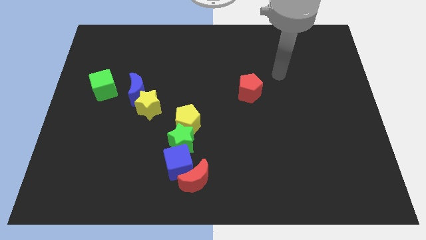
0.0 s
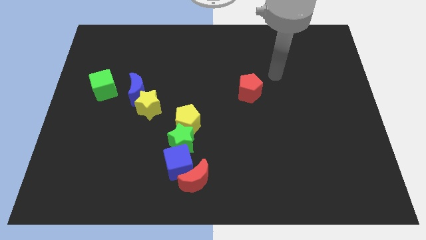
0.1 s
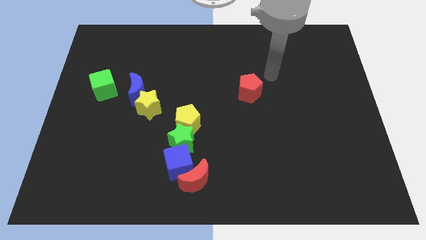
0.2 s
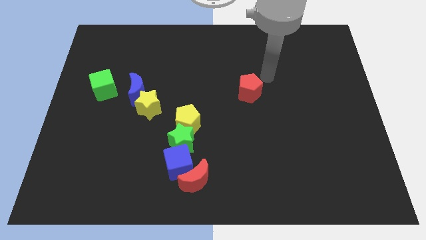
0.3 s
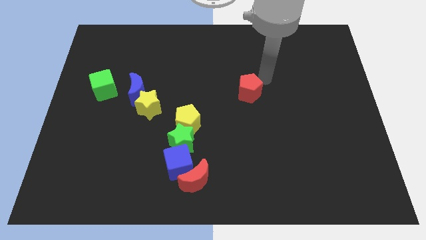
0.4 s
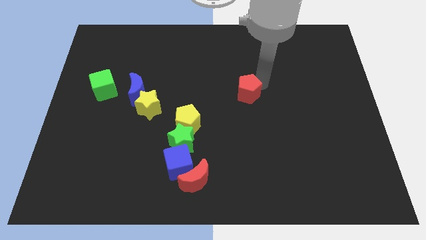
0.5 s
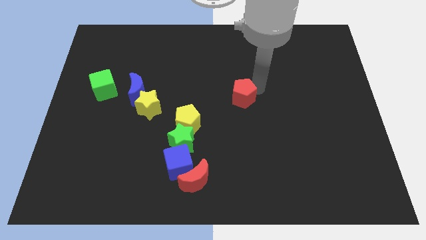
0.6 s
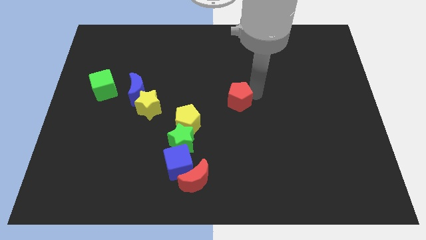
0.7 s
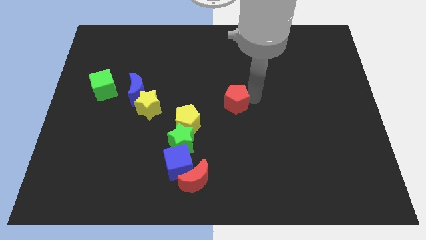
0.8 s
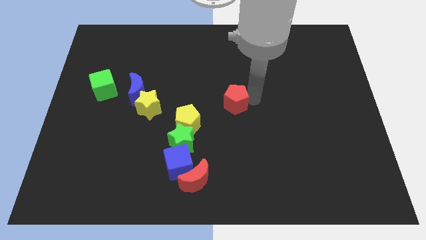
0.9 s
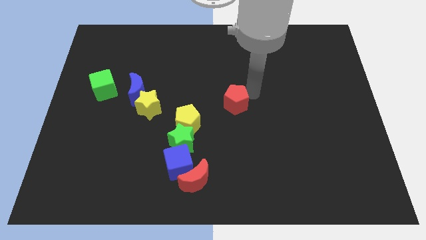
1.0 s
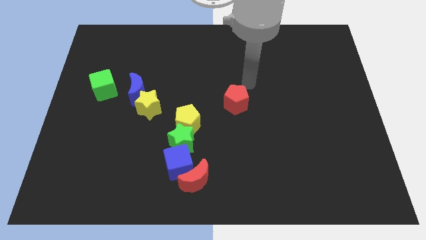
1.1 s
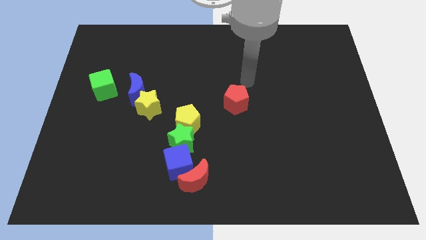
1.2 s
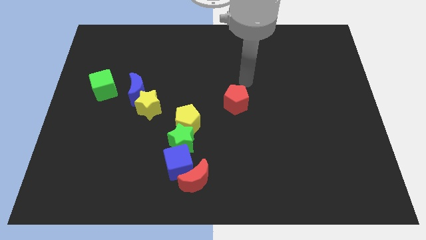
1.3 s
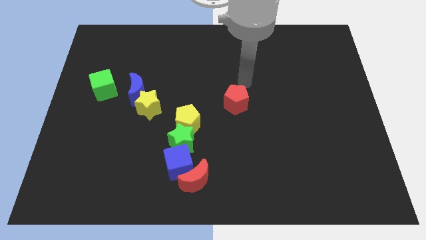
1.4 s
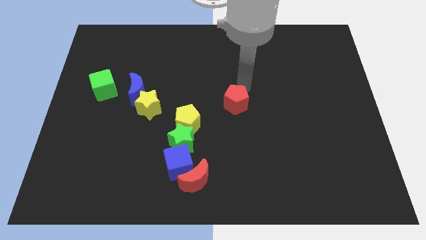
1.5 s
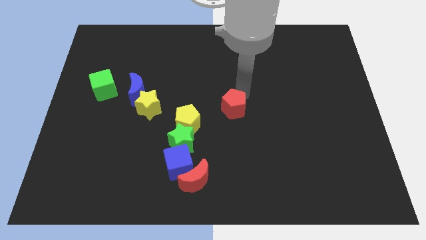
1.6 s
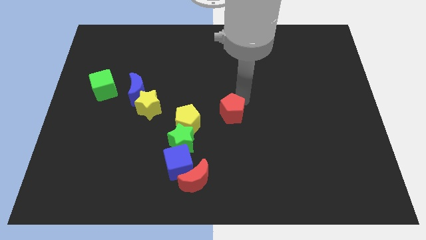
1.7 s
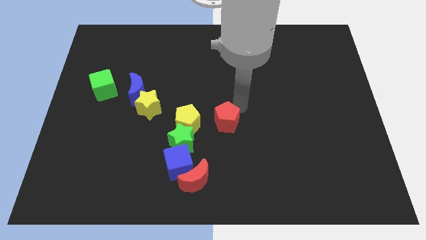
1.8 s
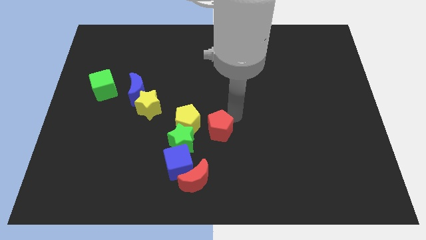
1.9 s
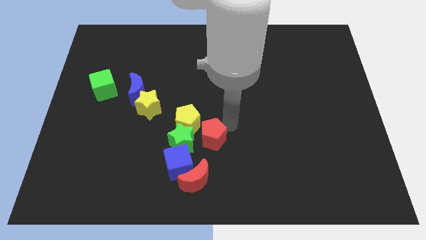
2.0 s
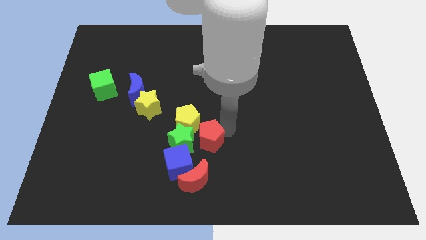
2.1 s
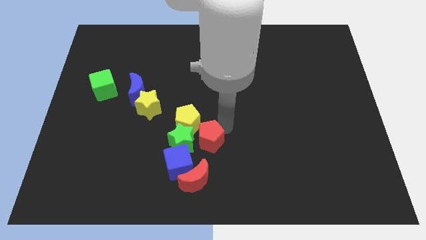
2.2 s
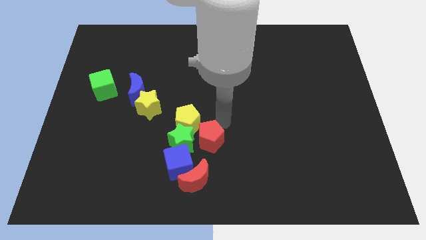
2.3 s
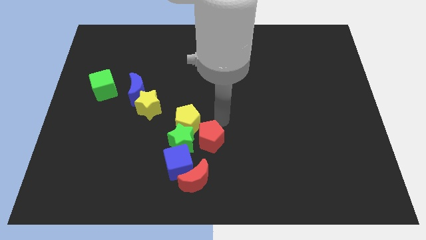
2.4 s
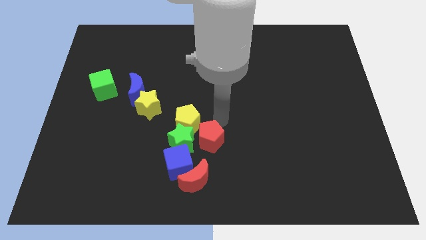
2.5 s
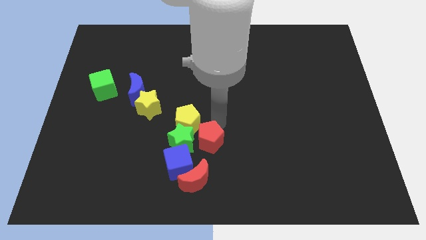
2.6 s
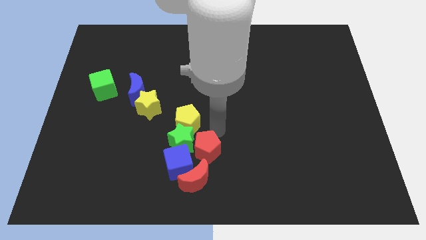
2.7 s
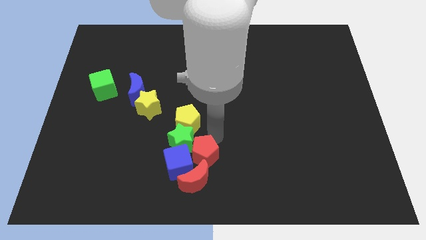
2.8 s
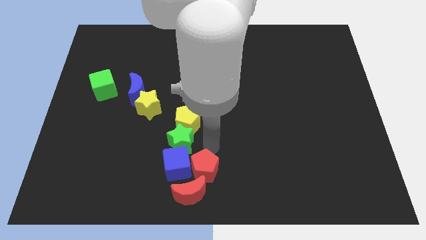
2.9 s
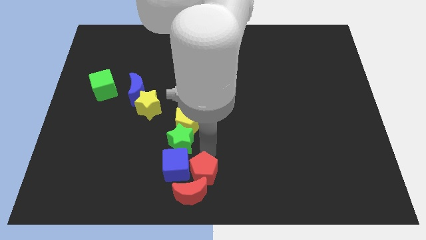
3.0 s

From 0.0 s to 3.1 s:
push red pentagon to the top right to the red crescent

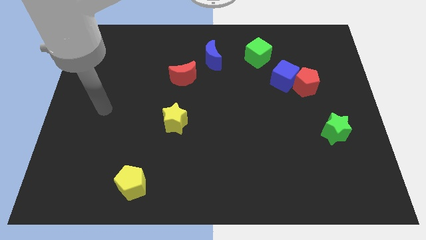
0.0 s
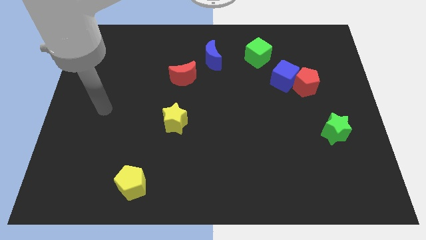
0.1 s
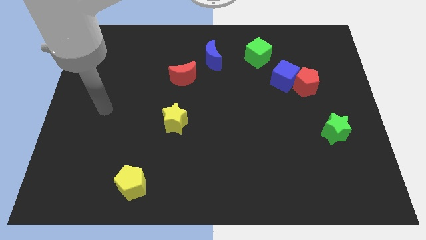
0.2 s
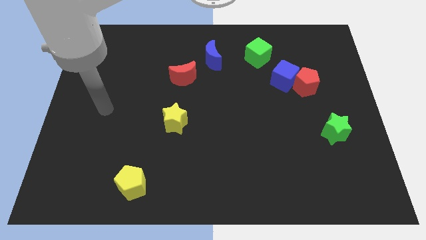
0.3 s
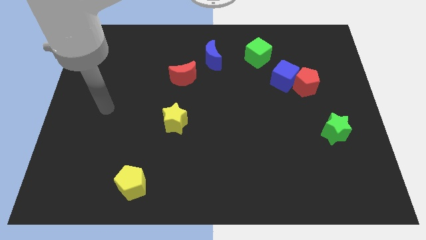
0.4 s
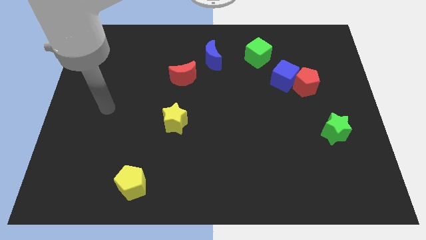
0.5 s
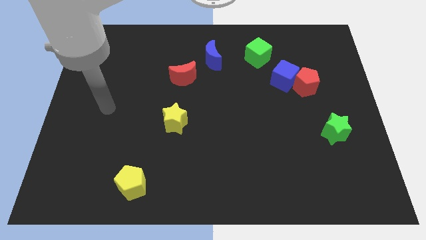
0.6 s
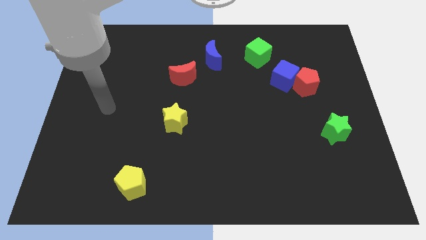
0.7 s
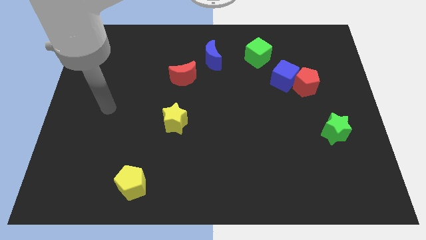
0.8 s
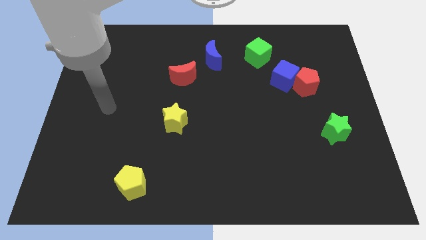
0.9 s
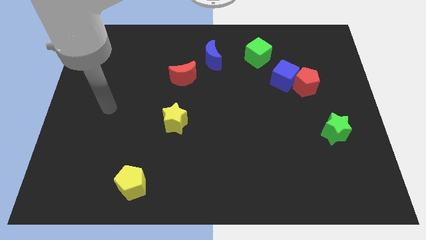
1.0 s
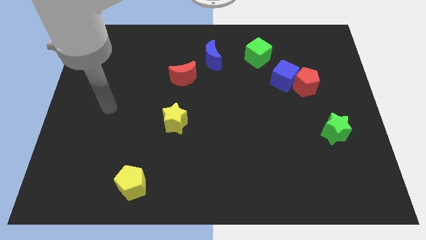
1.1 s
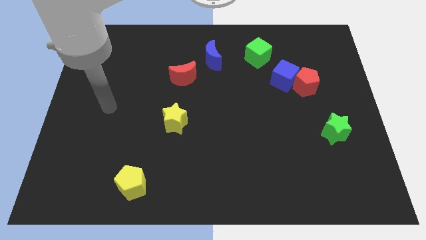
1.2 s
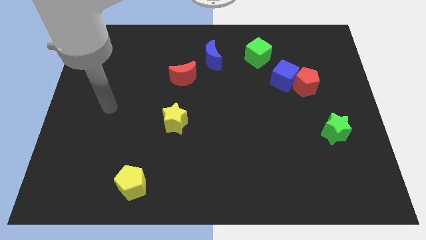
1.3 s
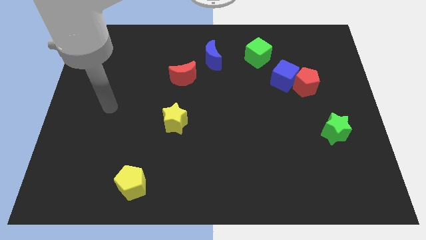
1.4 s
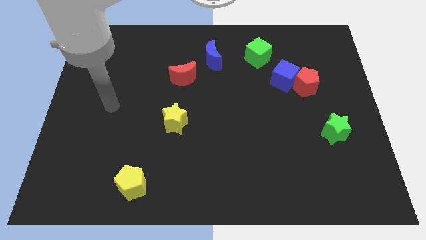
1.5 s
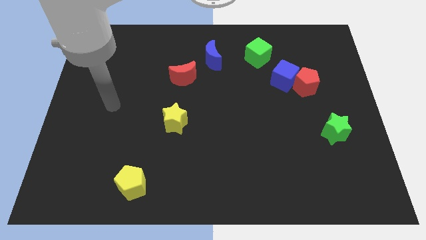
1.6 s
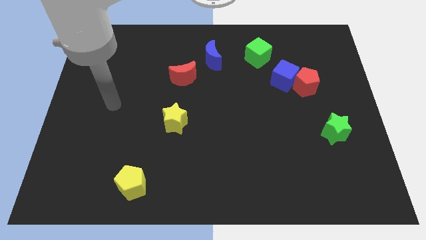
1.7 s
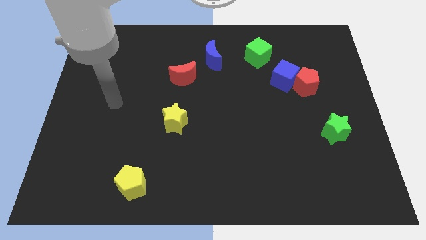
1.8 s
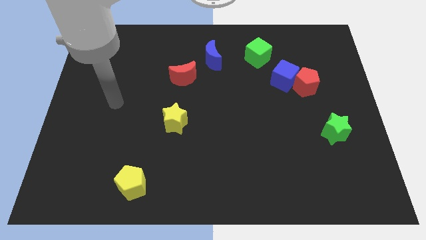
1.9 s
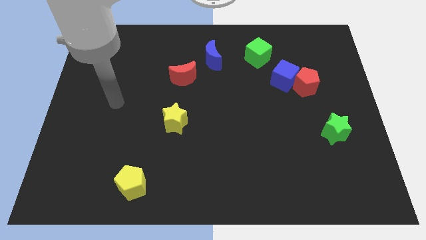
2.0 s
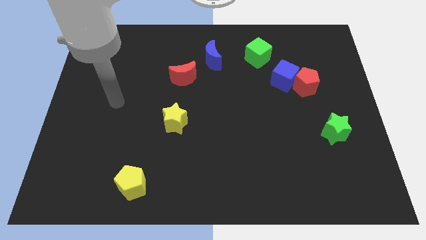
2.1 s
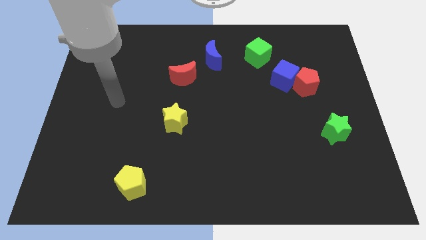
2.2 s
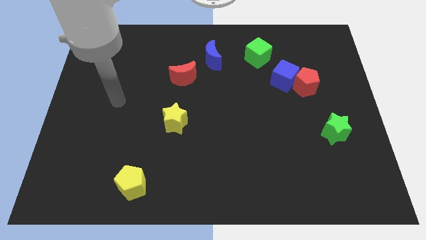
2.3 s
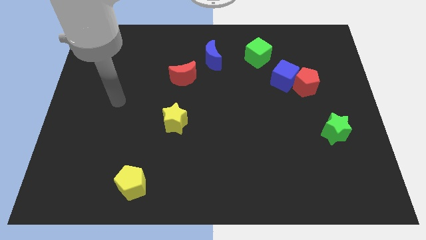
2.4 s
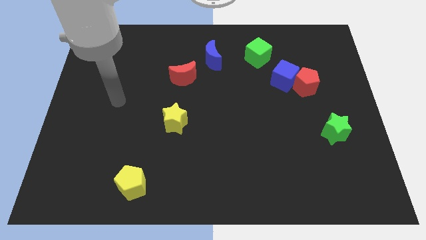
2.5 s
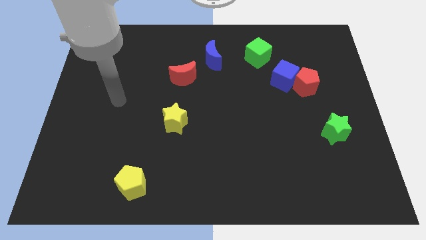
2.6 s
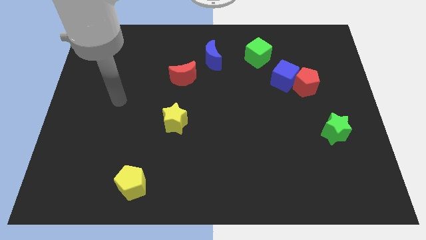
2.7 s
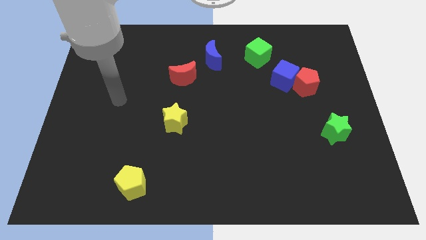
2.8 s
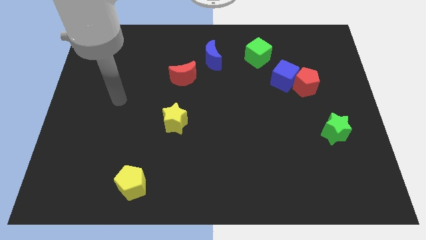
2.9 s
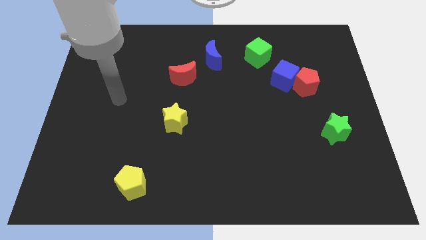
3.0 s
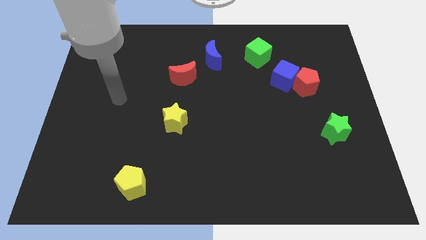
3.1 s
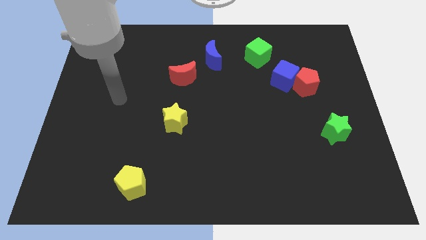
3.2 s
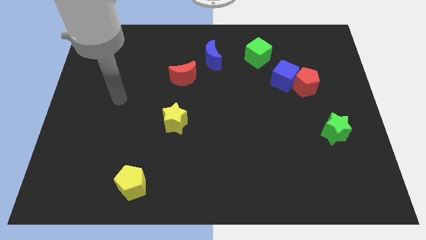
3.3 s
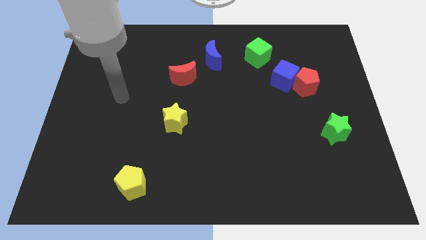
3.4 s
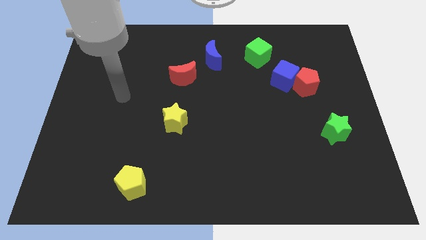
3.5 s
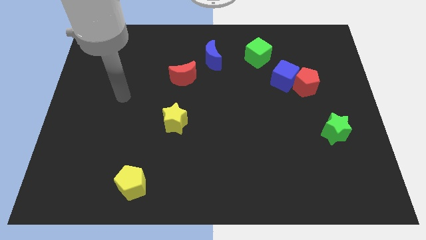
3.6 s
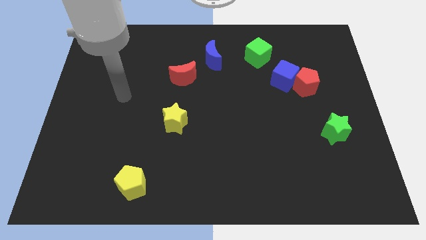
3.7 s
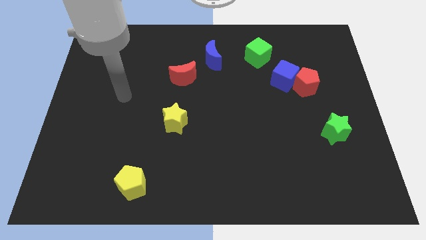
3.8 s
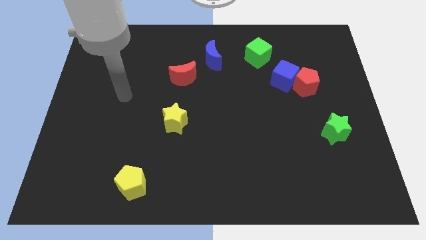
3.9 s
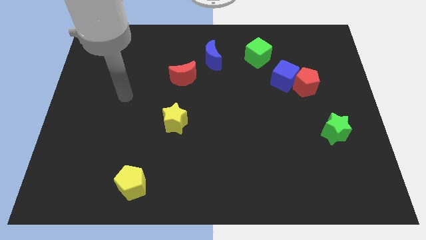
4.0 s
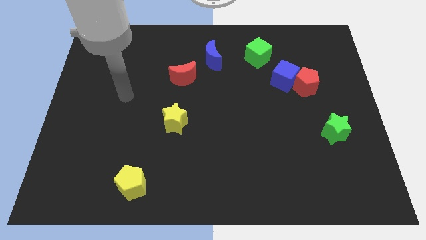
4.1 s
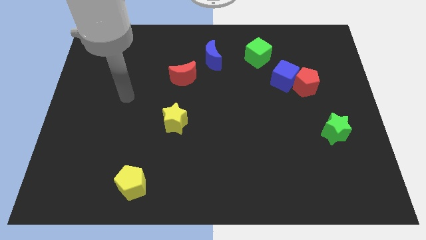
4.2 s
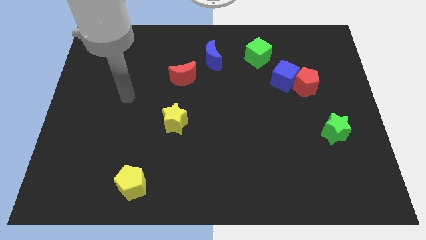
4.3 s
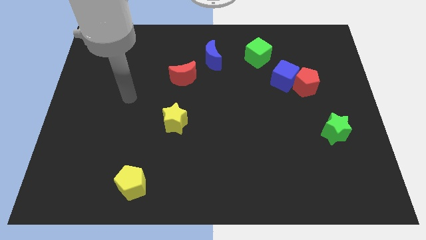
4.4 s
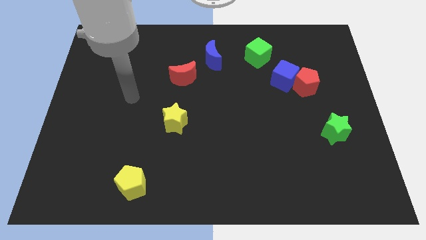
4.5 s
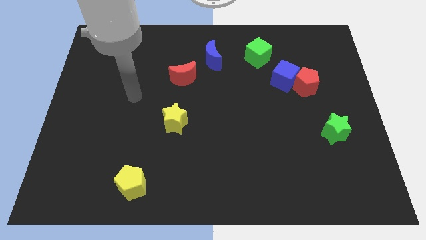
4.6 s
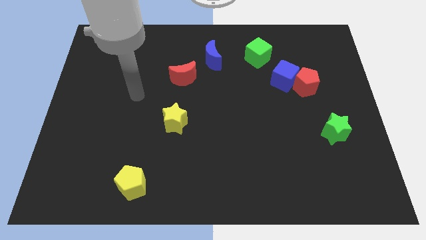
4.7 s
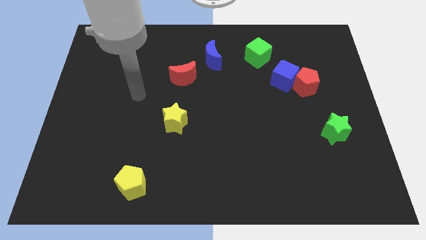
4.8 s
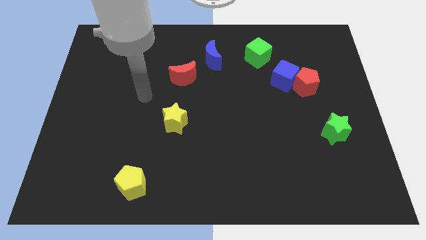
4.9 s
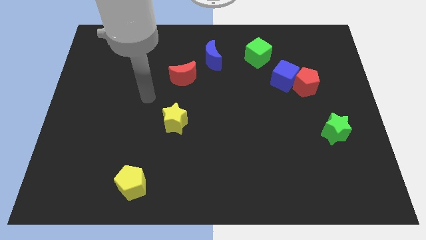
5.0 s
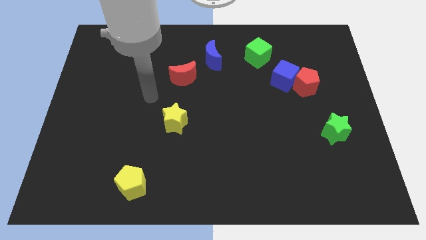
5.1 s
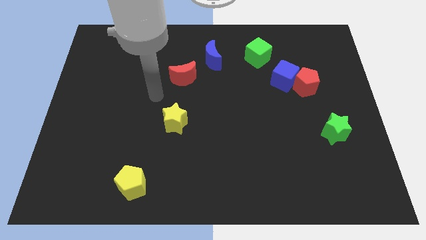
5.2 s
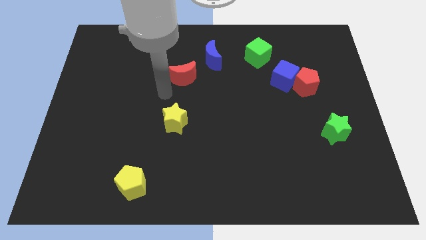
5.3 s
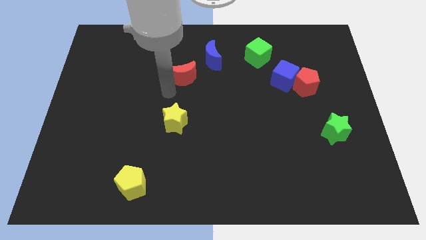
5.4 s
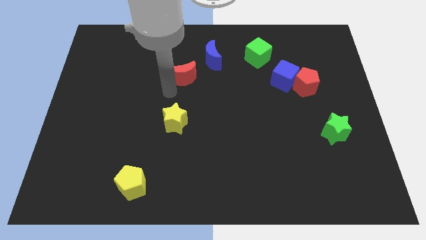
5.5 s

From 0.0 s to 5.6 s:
move your arm close to the red moon

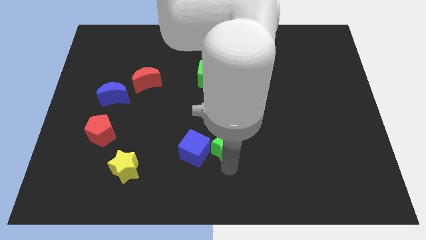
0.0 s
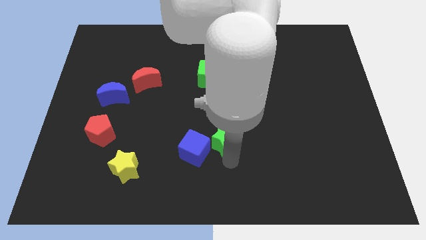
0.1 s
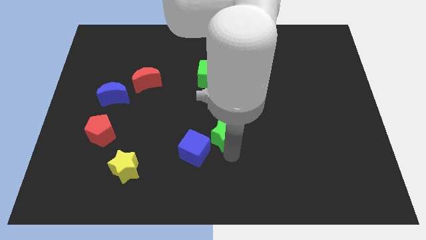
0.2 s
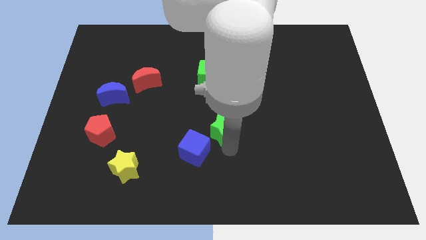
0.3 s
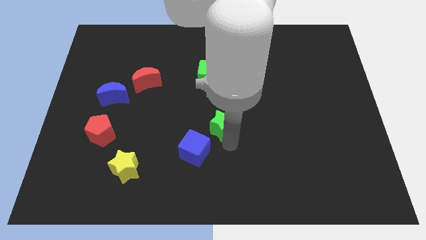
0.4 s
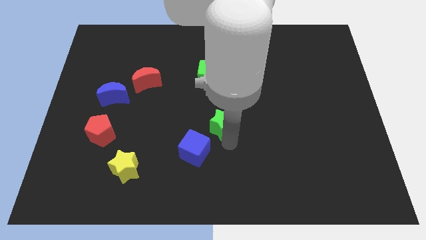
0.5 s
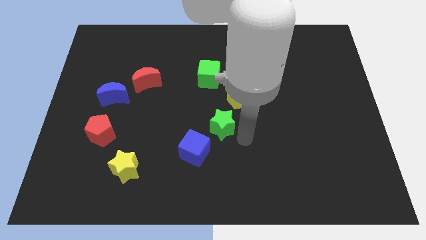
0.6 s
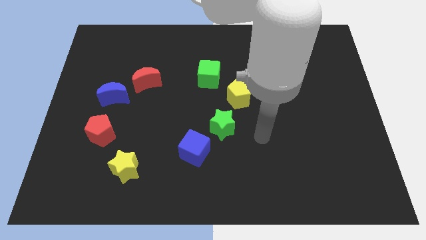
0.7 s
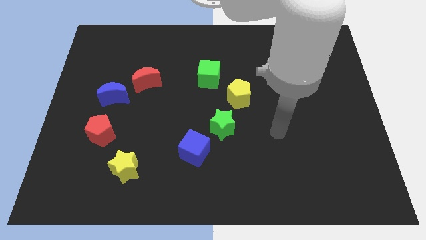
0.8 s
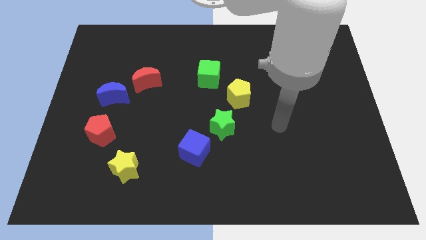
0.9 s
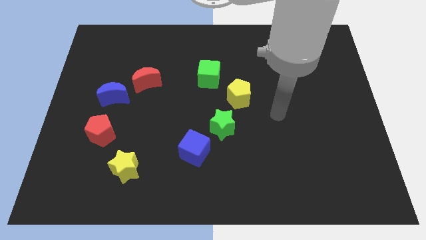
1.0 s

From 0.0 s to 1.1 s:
separate the green star from the blue cube
